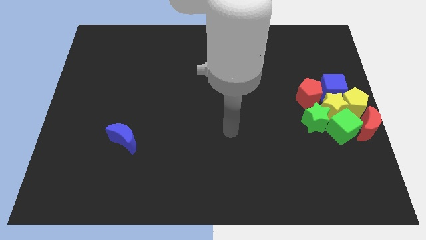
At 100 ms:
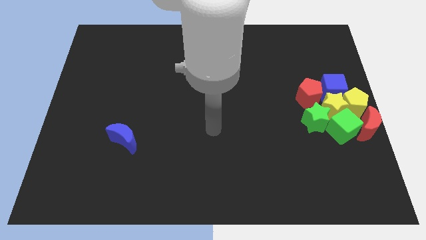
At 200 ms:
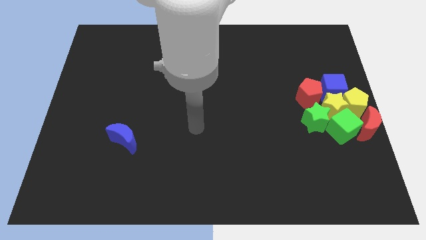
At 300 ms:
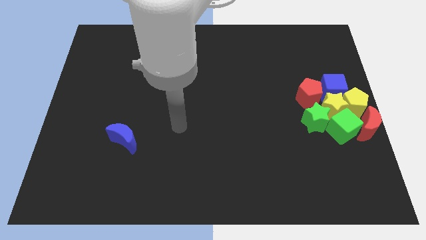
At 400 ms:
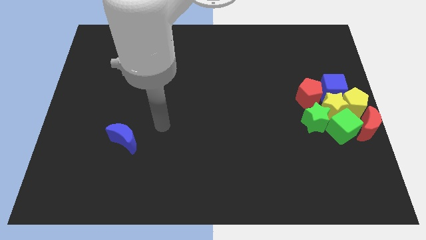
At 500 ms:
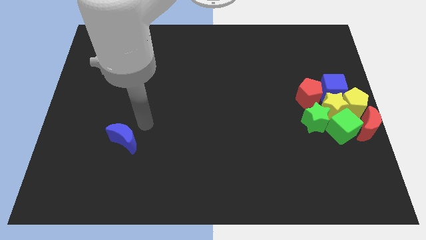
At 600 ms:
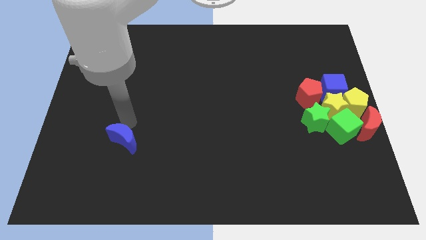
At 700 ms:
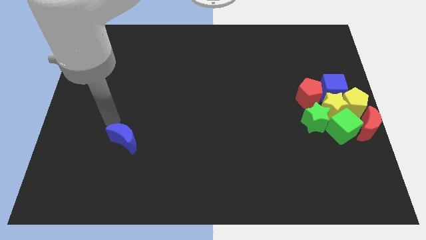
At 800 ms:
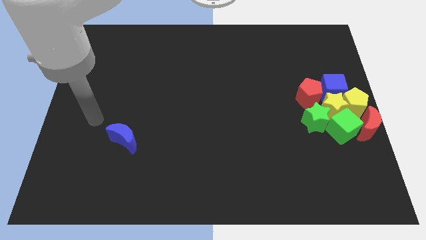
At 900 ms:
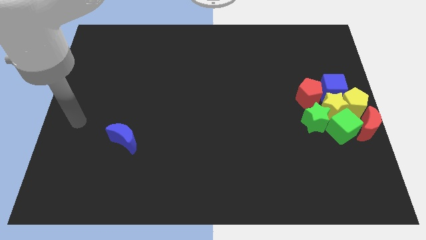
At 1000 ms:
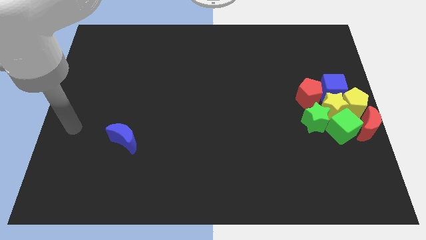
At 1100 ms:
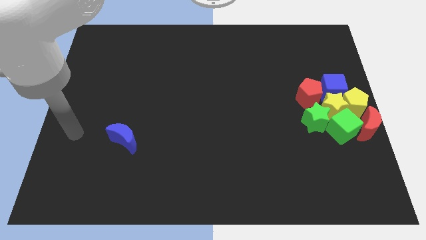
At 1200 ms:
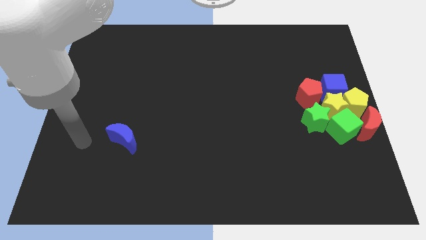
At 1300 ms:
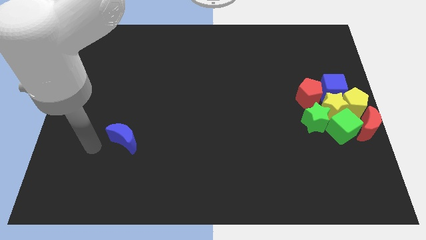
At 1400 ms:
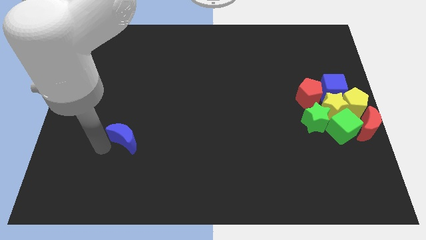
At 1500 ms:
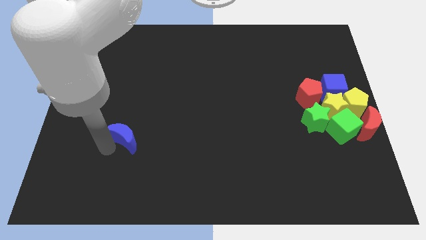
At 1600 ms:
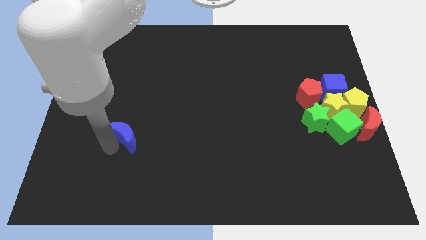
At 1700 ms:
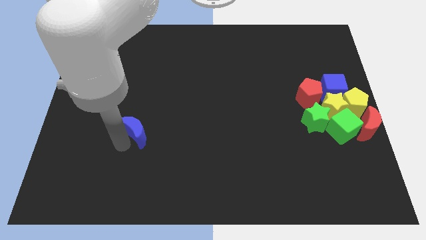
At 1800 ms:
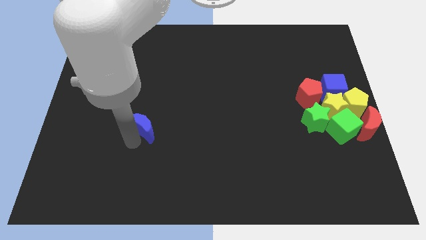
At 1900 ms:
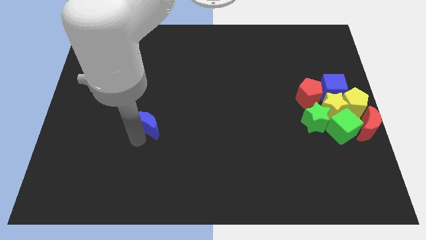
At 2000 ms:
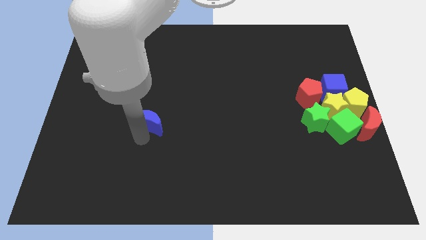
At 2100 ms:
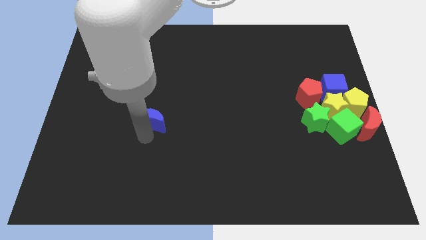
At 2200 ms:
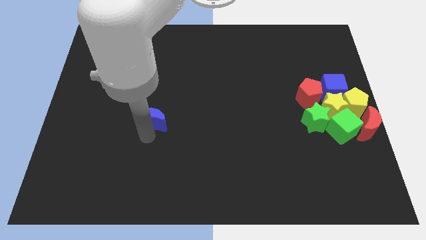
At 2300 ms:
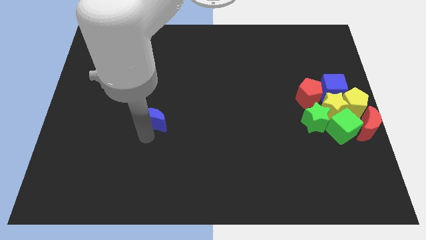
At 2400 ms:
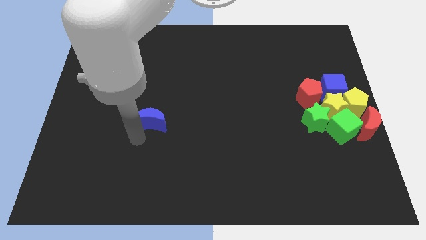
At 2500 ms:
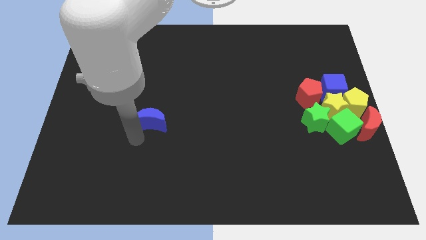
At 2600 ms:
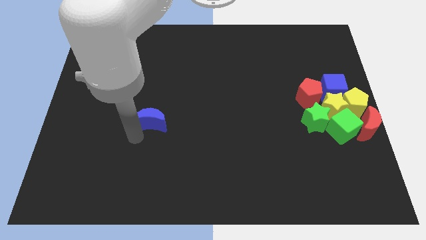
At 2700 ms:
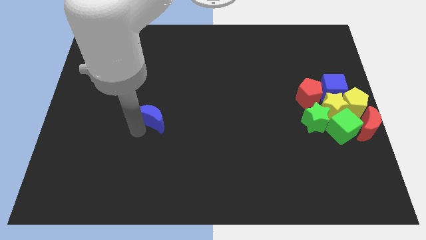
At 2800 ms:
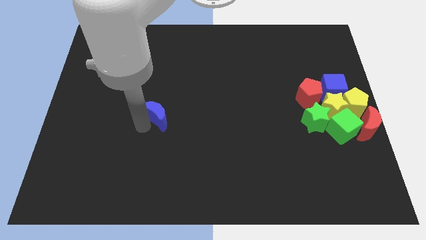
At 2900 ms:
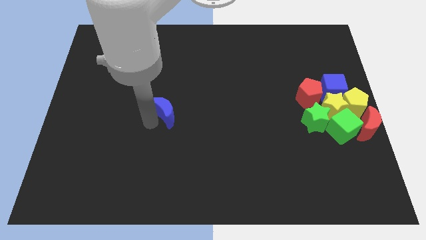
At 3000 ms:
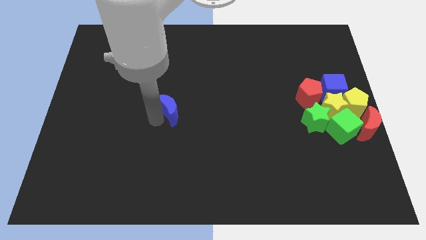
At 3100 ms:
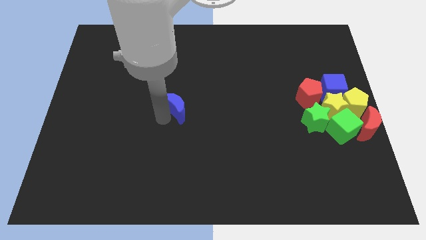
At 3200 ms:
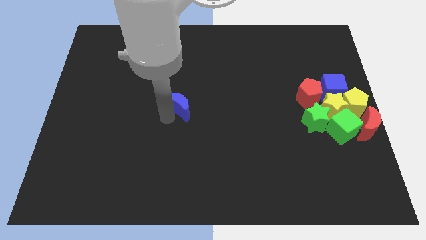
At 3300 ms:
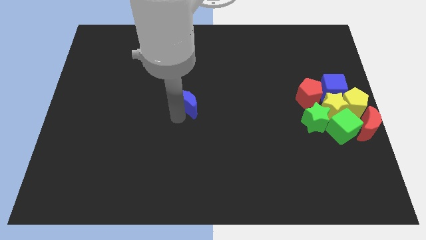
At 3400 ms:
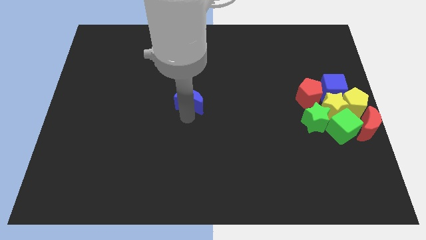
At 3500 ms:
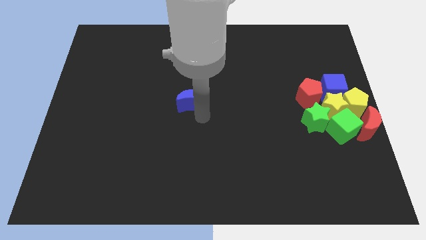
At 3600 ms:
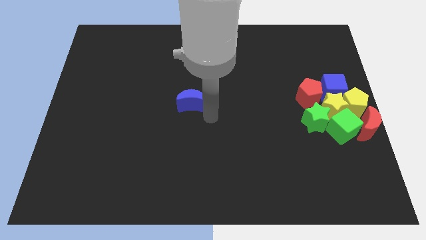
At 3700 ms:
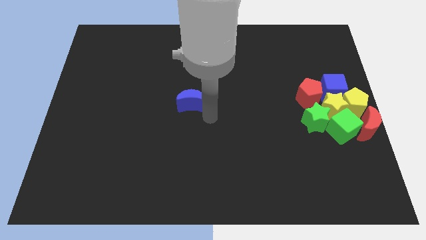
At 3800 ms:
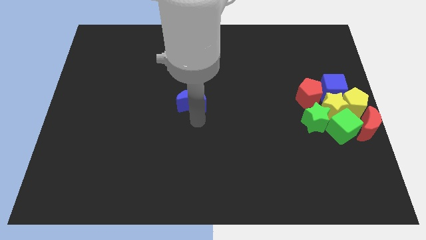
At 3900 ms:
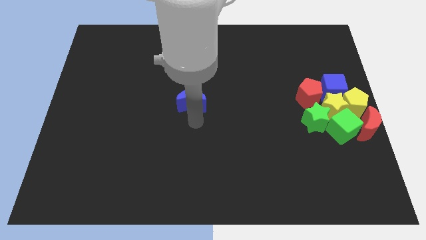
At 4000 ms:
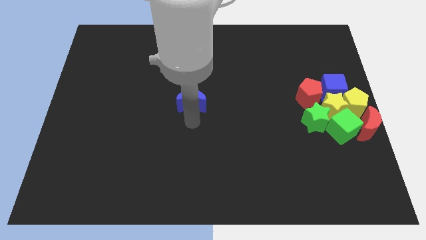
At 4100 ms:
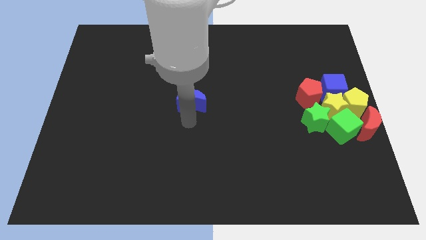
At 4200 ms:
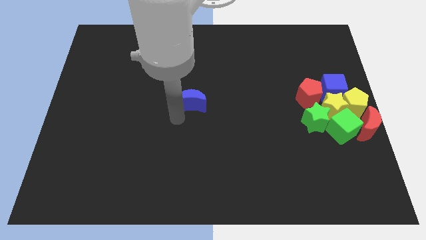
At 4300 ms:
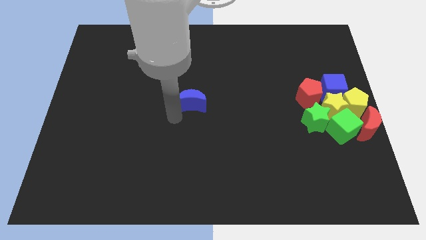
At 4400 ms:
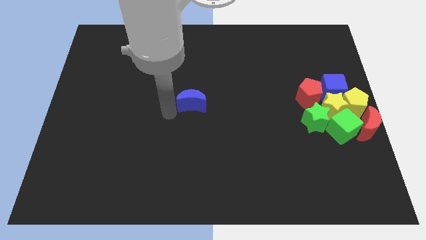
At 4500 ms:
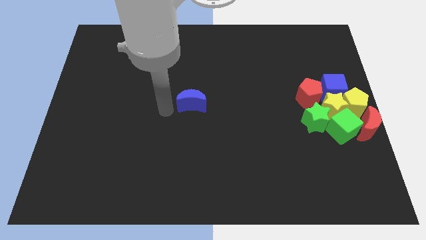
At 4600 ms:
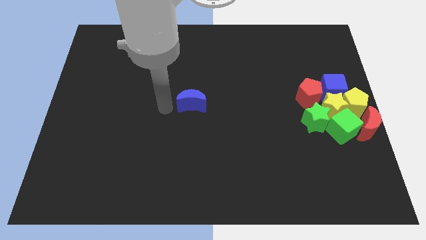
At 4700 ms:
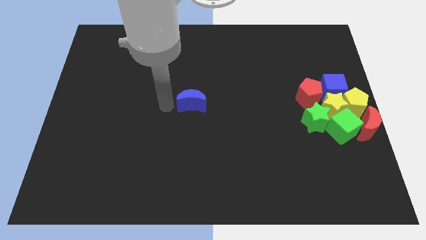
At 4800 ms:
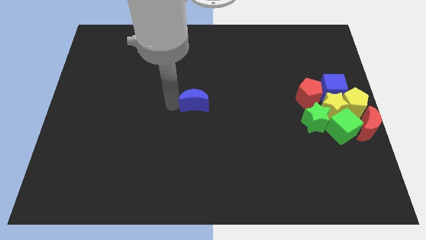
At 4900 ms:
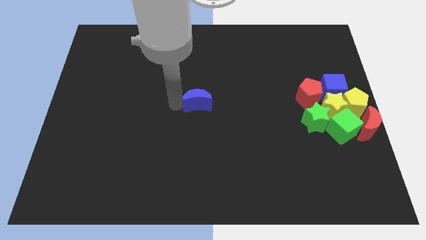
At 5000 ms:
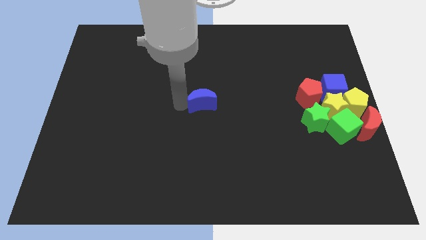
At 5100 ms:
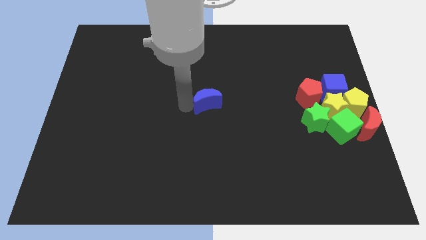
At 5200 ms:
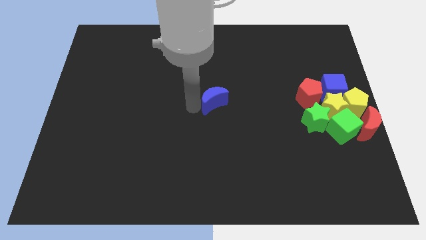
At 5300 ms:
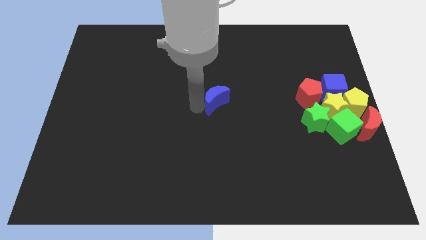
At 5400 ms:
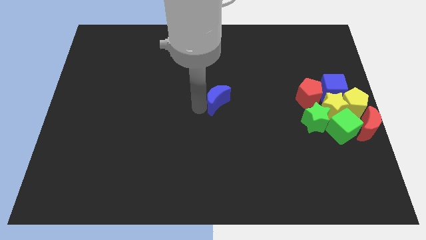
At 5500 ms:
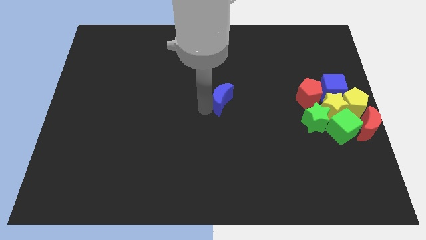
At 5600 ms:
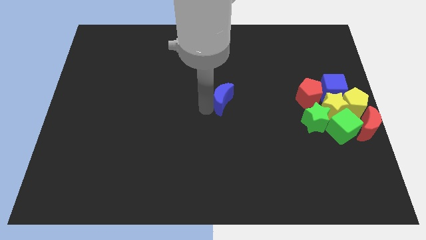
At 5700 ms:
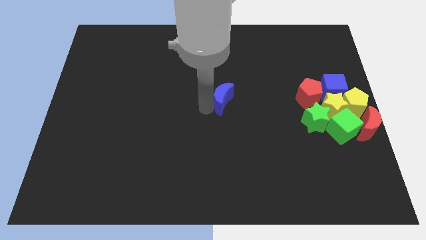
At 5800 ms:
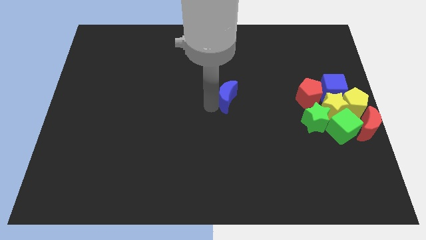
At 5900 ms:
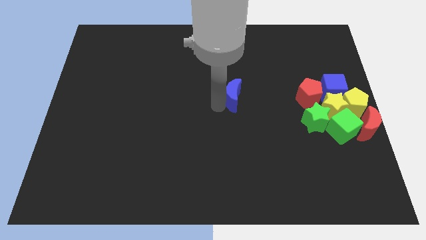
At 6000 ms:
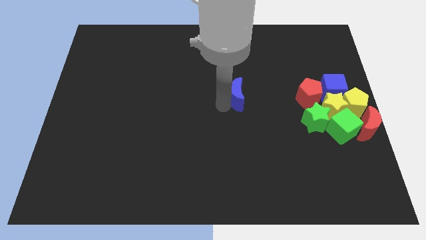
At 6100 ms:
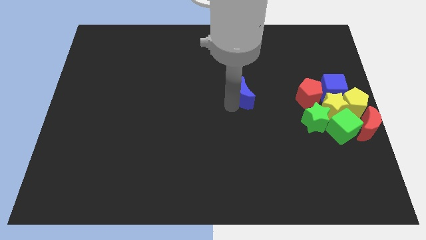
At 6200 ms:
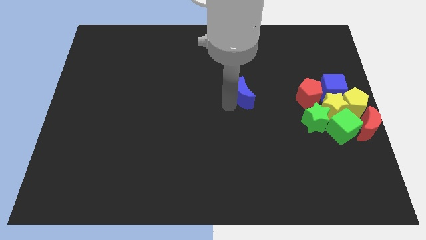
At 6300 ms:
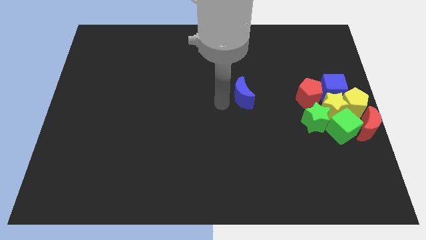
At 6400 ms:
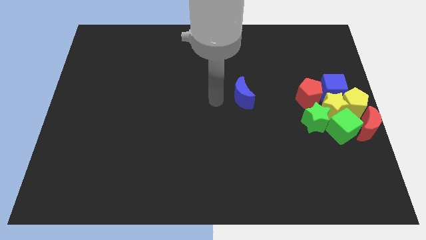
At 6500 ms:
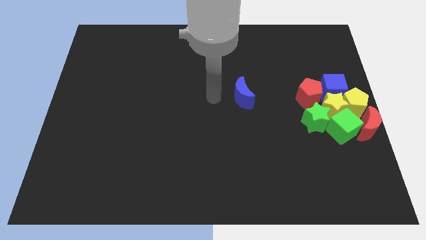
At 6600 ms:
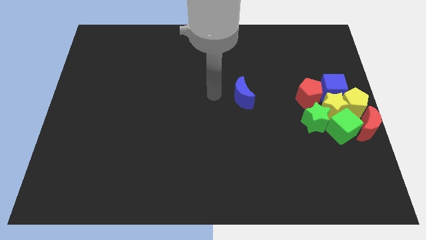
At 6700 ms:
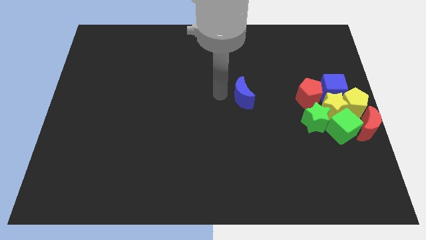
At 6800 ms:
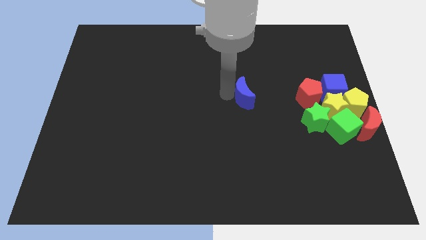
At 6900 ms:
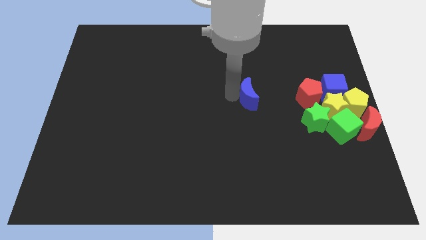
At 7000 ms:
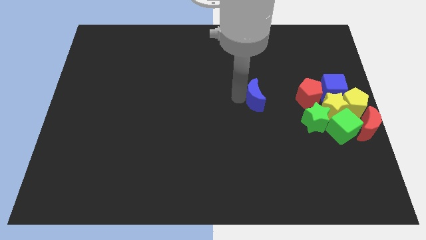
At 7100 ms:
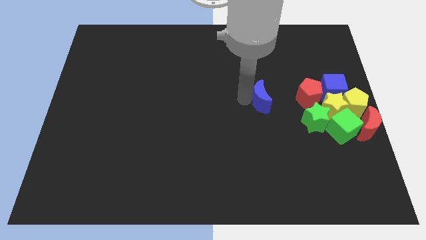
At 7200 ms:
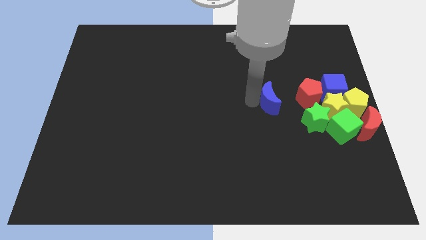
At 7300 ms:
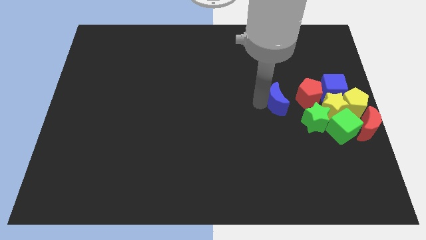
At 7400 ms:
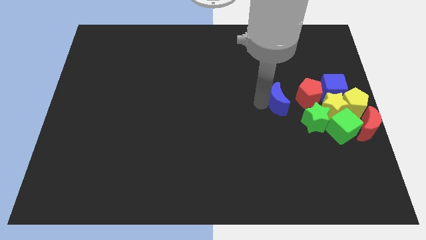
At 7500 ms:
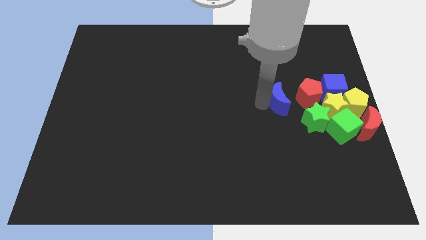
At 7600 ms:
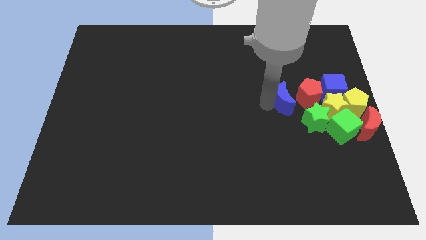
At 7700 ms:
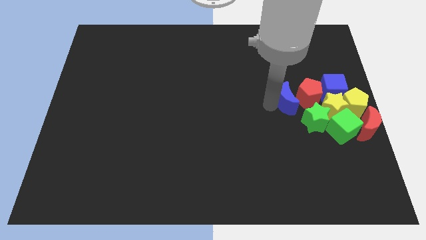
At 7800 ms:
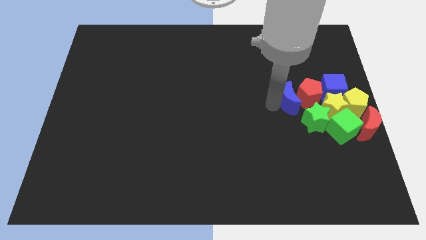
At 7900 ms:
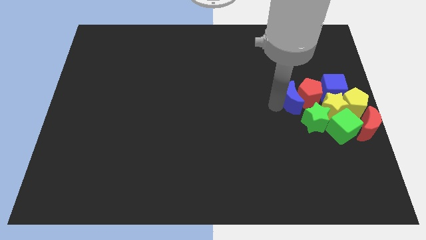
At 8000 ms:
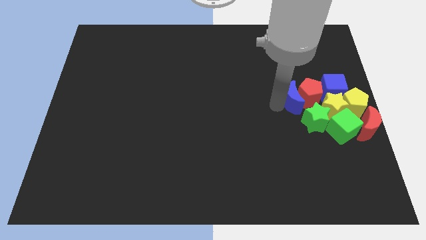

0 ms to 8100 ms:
place the blue moon to the left of the red pentagon

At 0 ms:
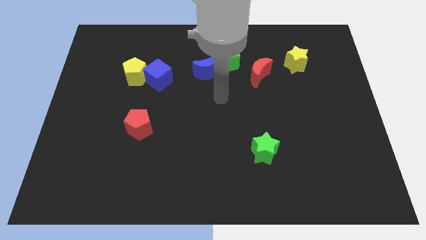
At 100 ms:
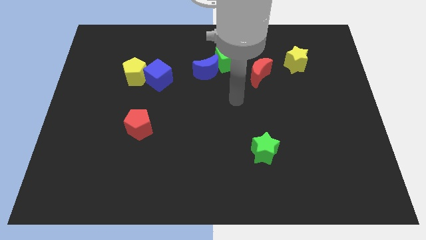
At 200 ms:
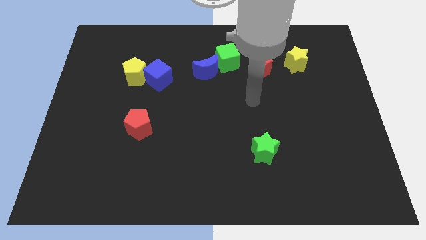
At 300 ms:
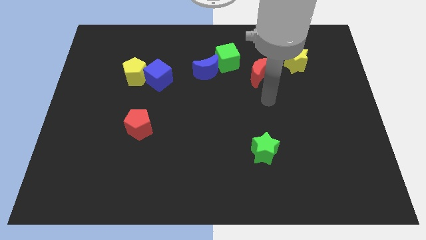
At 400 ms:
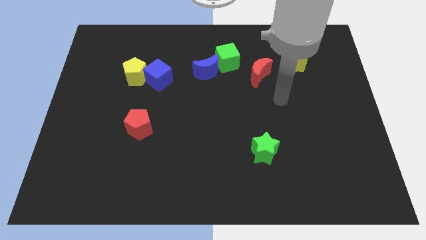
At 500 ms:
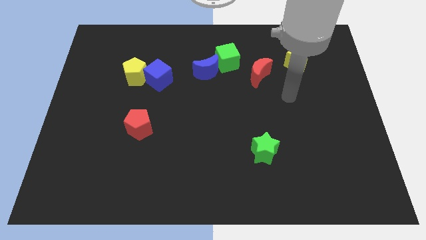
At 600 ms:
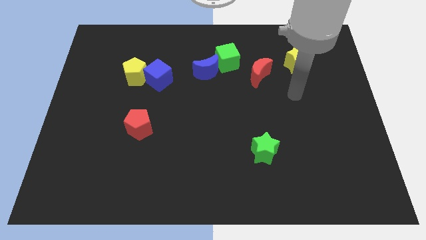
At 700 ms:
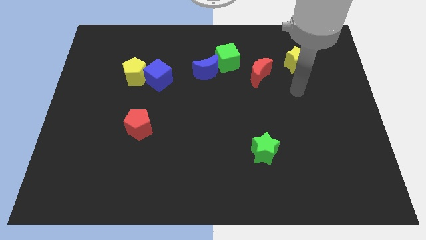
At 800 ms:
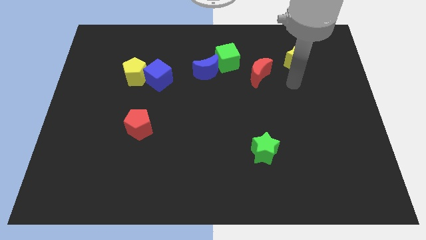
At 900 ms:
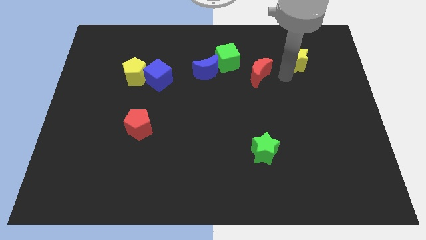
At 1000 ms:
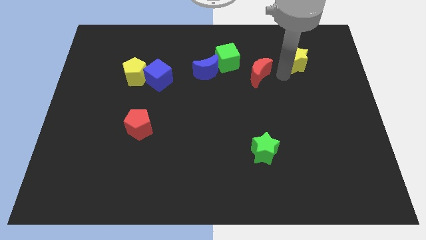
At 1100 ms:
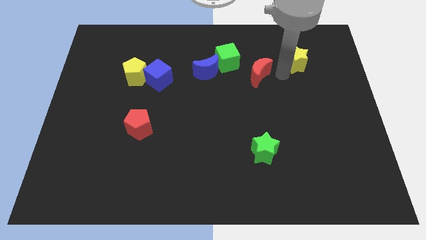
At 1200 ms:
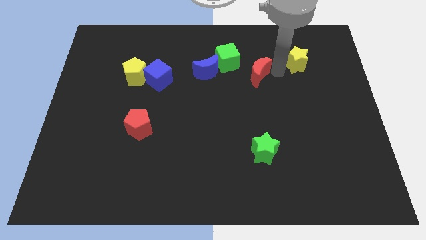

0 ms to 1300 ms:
place your arm to the right side of red crescent
